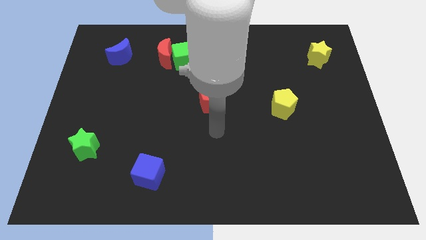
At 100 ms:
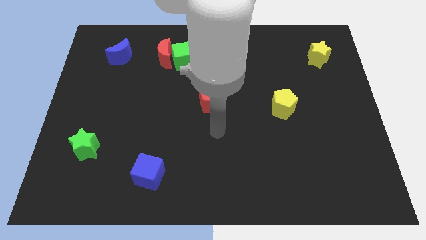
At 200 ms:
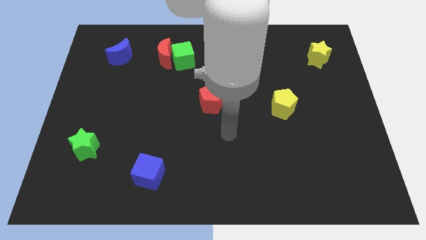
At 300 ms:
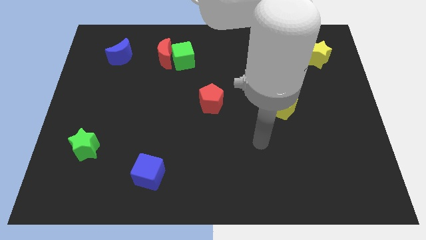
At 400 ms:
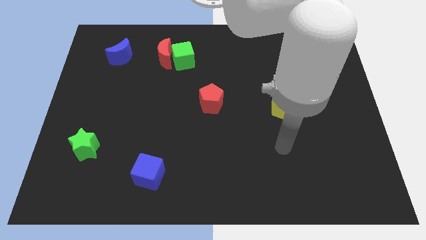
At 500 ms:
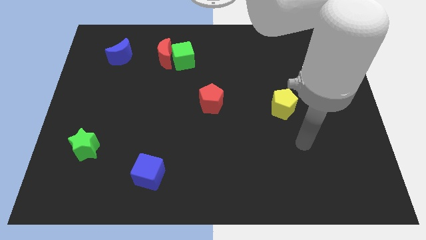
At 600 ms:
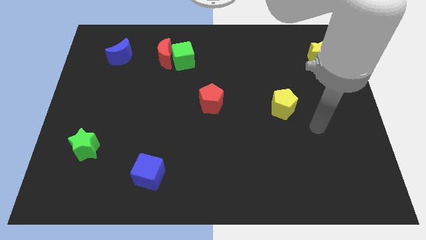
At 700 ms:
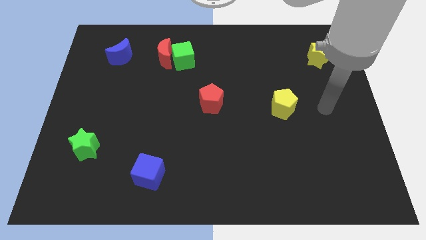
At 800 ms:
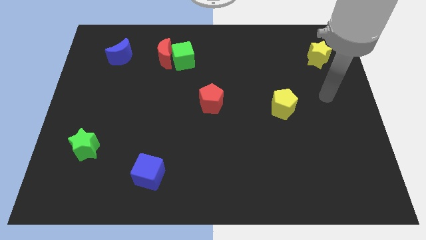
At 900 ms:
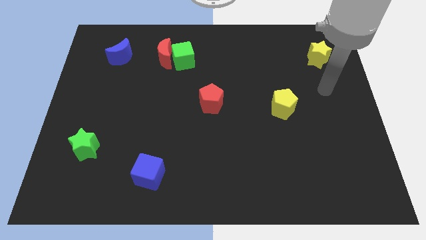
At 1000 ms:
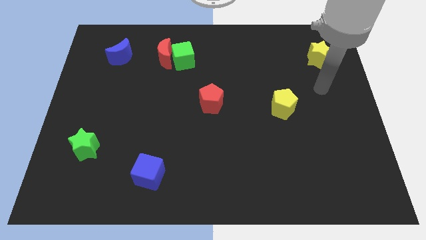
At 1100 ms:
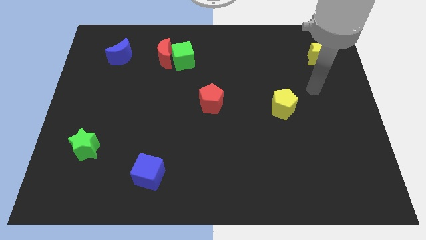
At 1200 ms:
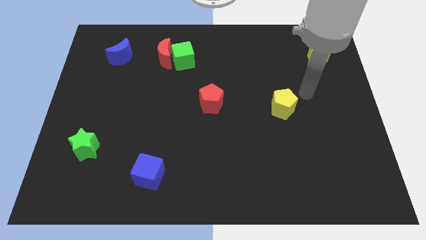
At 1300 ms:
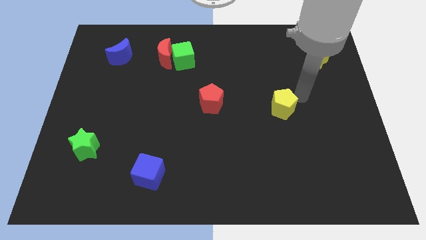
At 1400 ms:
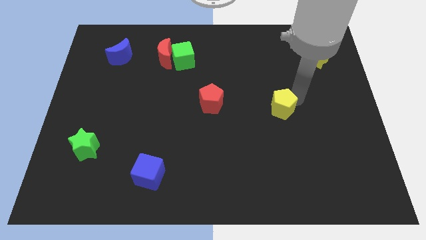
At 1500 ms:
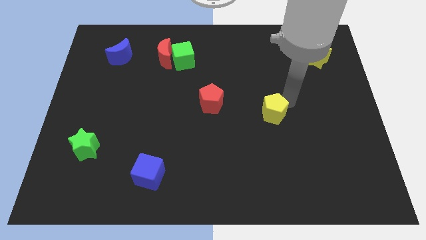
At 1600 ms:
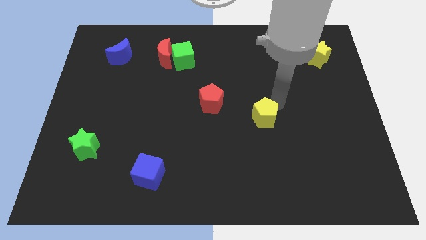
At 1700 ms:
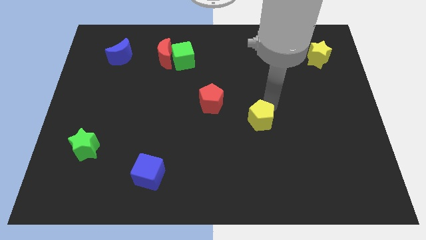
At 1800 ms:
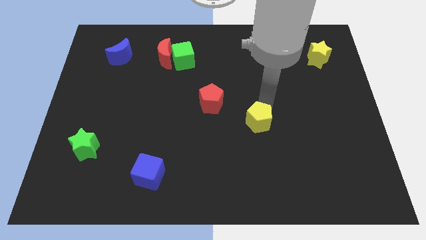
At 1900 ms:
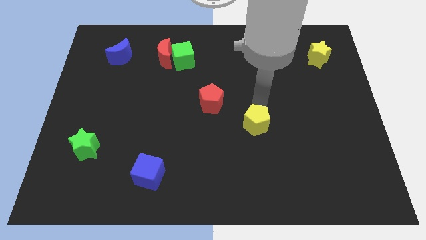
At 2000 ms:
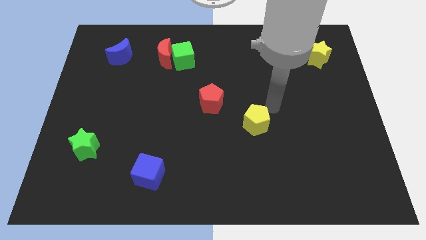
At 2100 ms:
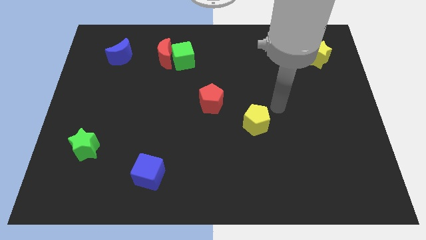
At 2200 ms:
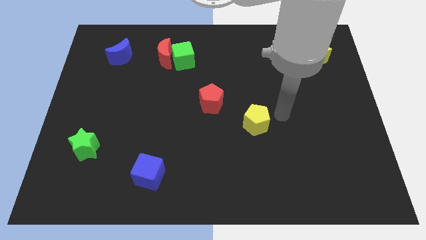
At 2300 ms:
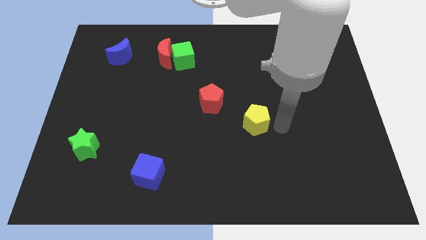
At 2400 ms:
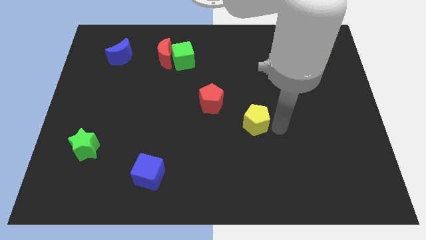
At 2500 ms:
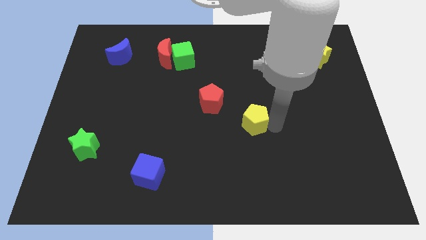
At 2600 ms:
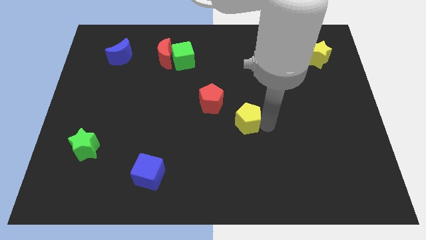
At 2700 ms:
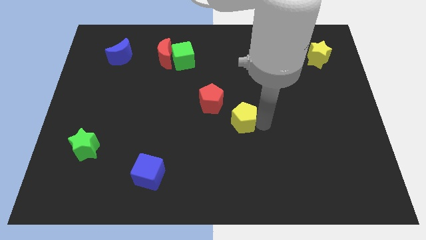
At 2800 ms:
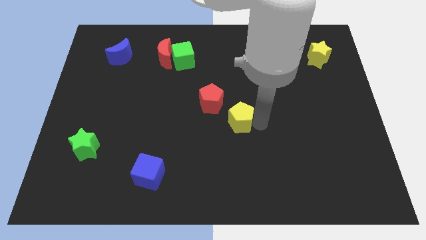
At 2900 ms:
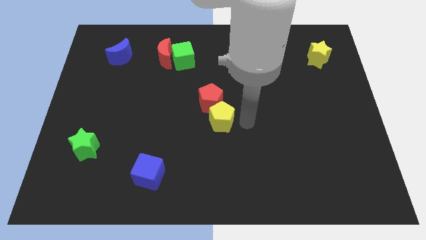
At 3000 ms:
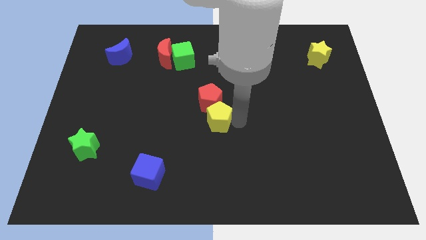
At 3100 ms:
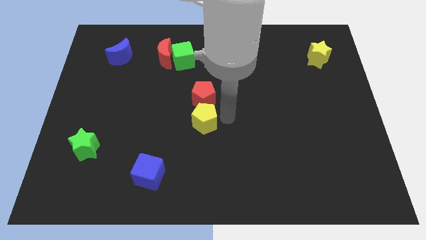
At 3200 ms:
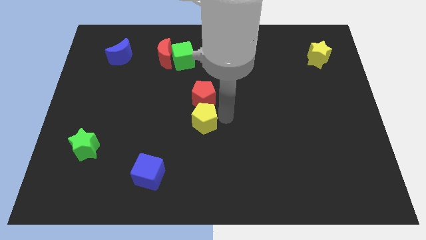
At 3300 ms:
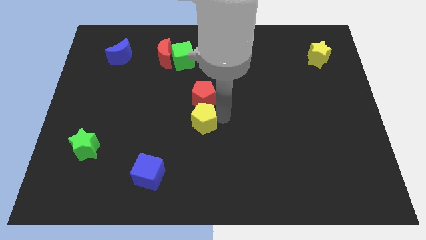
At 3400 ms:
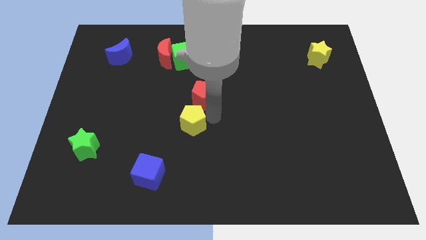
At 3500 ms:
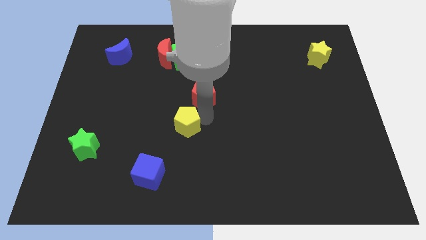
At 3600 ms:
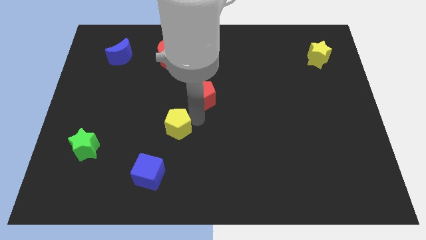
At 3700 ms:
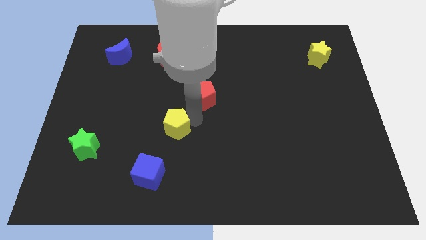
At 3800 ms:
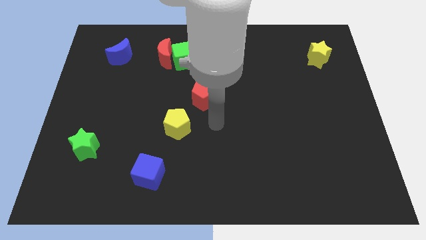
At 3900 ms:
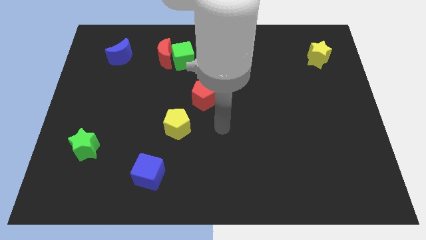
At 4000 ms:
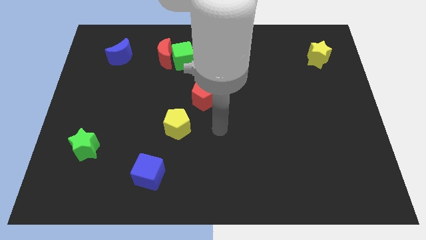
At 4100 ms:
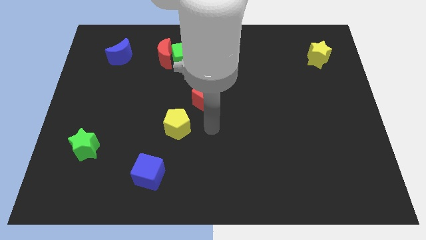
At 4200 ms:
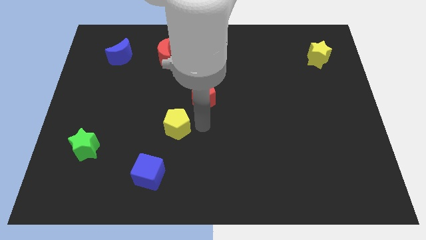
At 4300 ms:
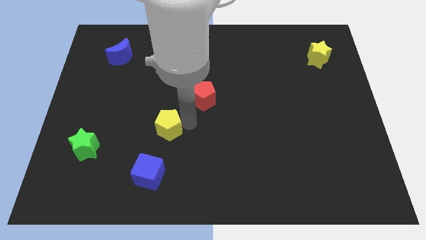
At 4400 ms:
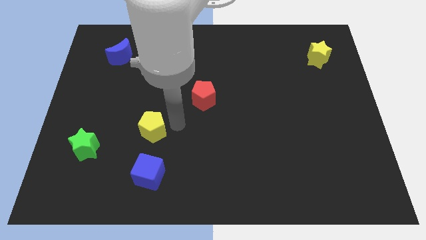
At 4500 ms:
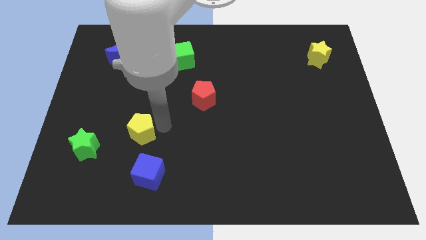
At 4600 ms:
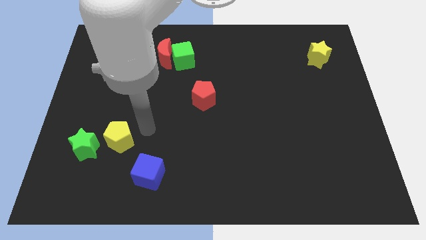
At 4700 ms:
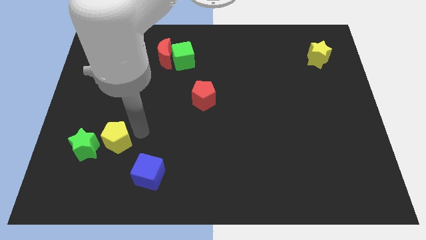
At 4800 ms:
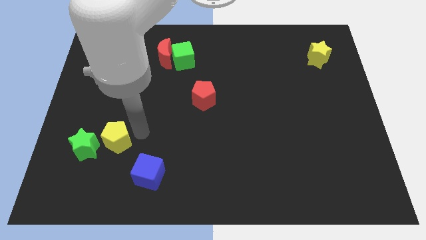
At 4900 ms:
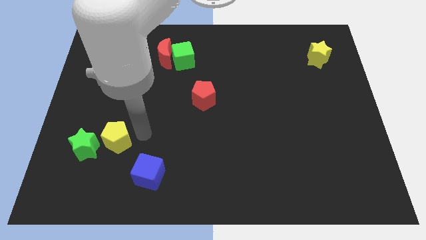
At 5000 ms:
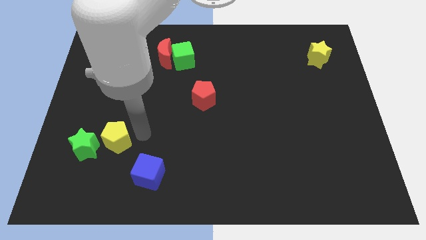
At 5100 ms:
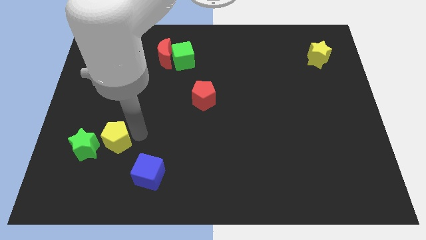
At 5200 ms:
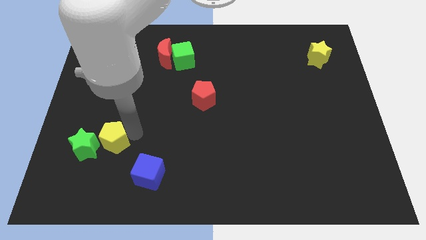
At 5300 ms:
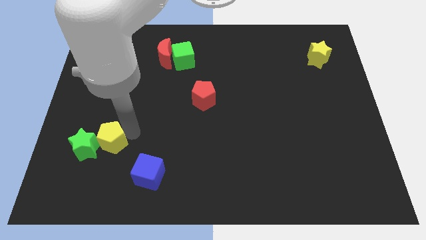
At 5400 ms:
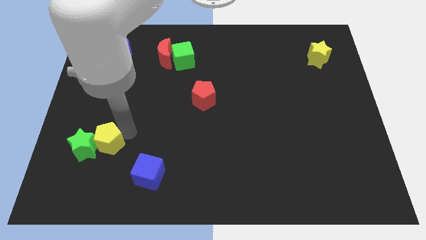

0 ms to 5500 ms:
put the yellow pentagon to the green star

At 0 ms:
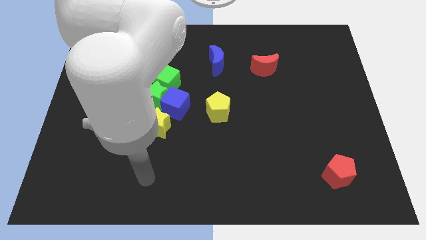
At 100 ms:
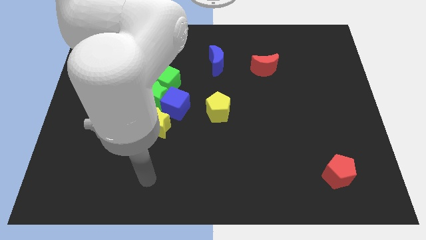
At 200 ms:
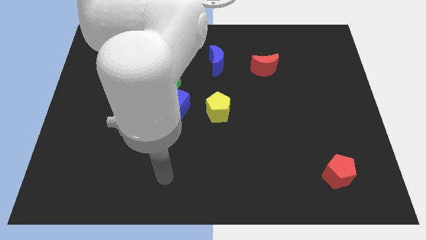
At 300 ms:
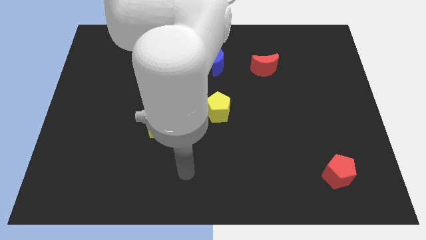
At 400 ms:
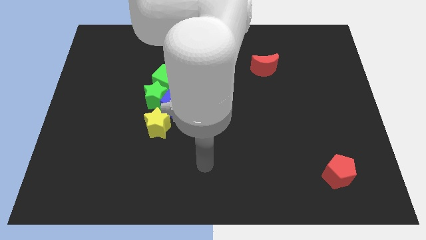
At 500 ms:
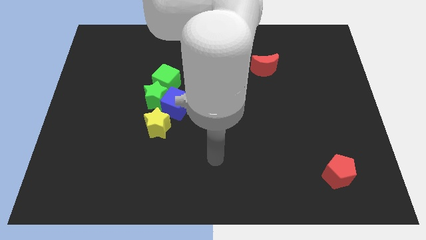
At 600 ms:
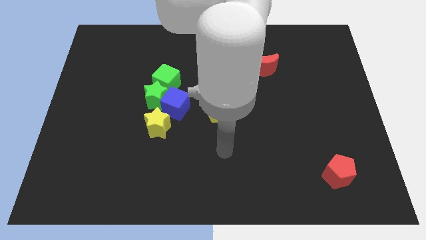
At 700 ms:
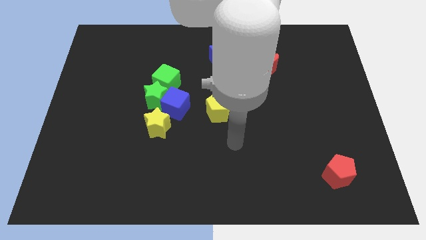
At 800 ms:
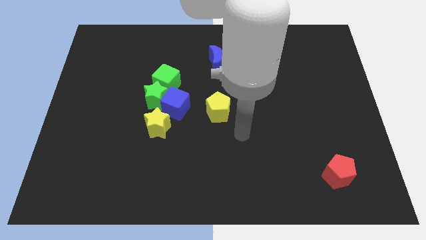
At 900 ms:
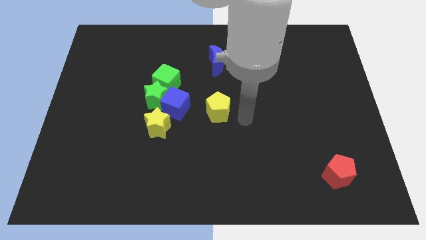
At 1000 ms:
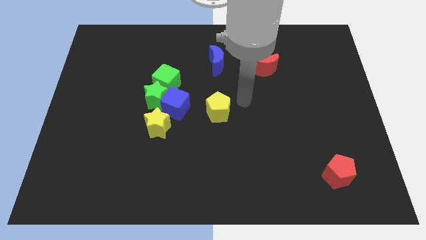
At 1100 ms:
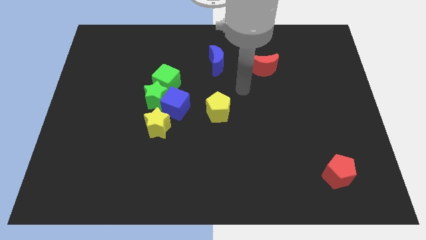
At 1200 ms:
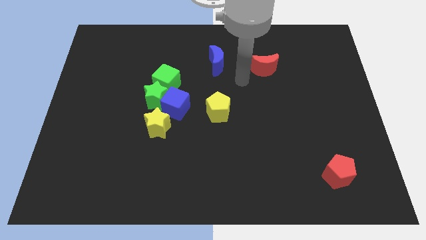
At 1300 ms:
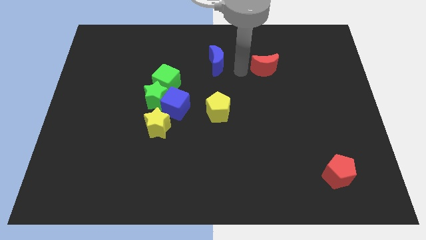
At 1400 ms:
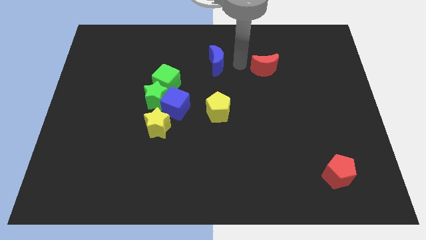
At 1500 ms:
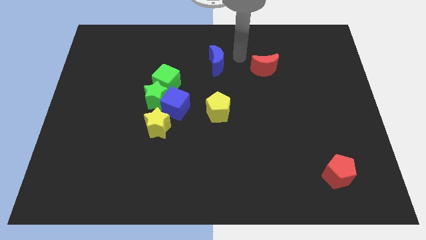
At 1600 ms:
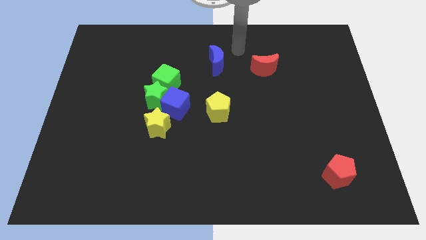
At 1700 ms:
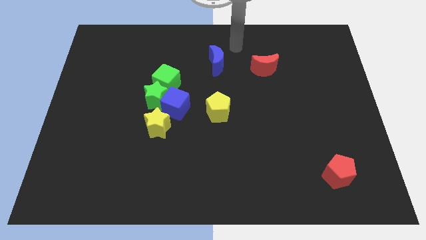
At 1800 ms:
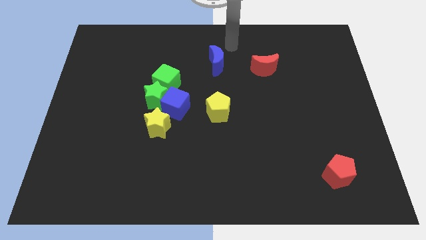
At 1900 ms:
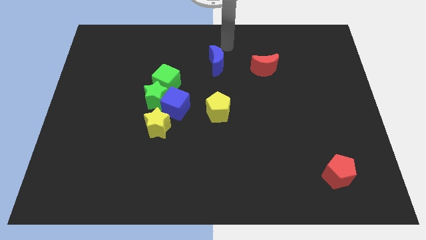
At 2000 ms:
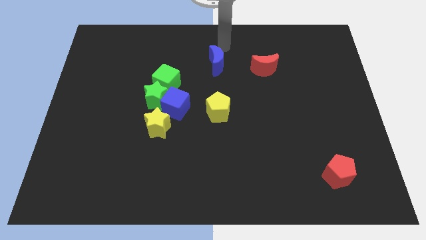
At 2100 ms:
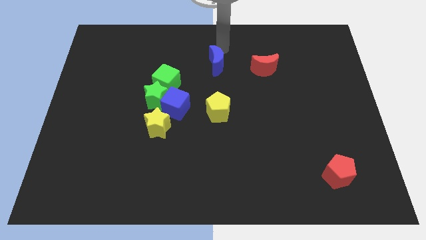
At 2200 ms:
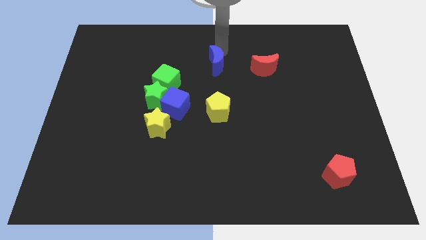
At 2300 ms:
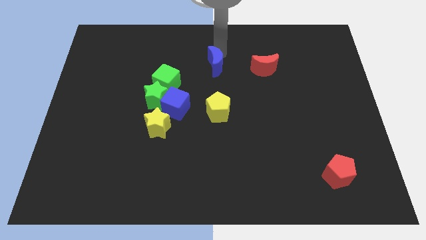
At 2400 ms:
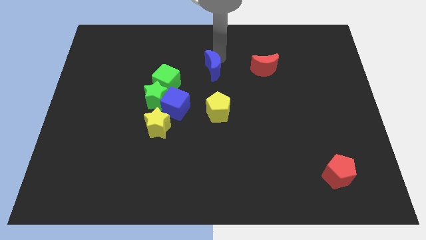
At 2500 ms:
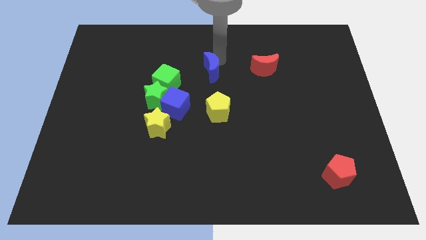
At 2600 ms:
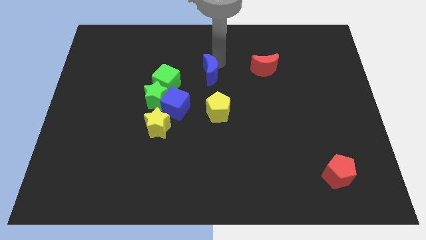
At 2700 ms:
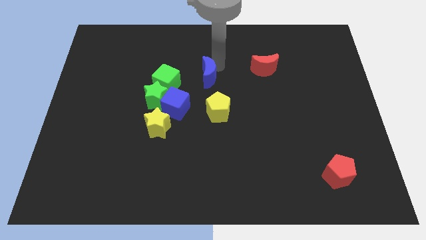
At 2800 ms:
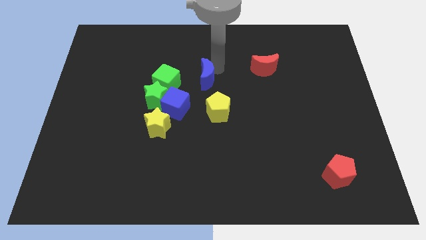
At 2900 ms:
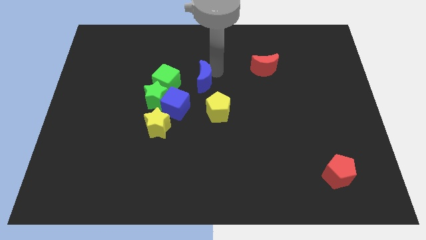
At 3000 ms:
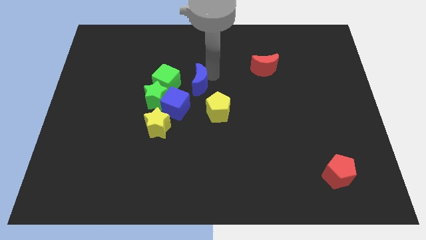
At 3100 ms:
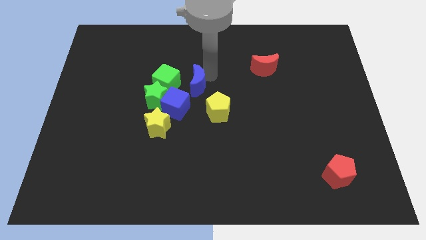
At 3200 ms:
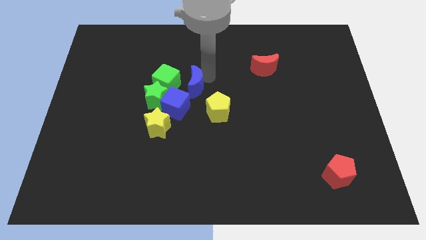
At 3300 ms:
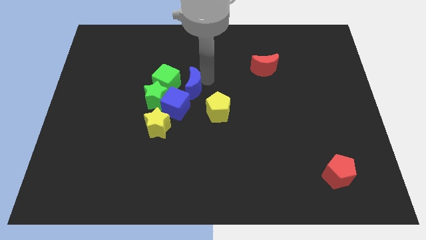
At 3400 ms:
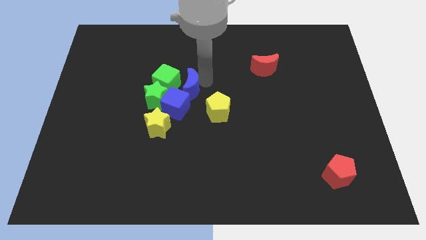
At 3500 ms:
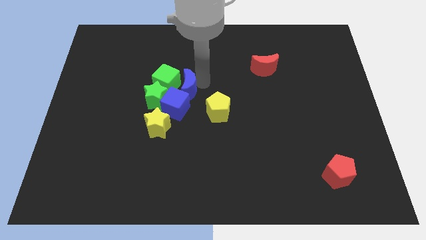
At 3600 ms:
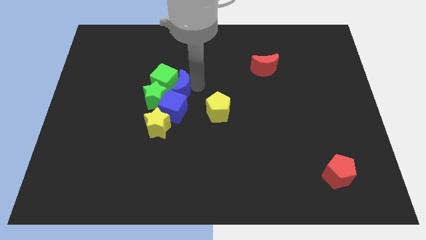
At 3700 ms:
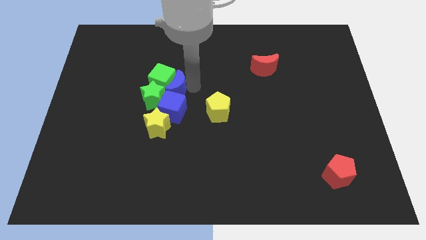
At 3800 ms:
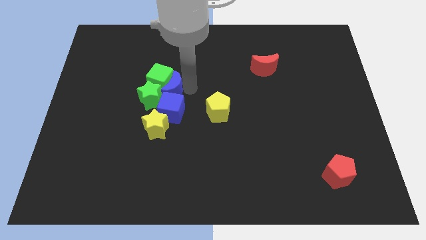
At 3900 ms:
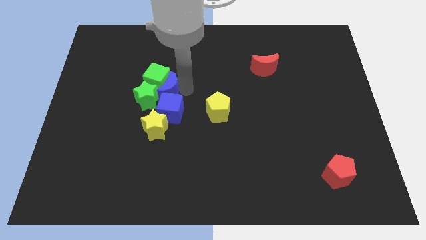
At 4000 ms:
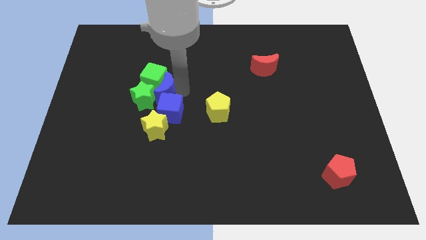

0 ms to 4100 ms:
slide the blue moon close to the green star
